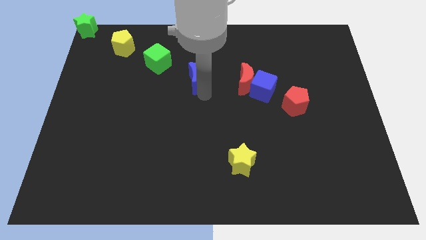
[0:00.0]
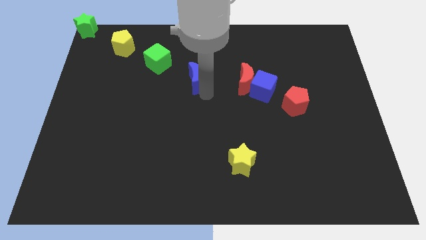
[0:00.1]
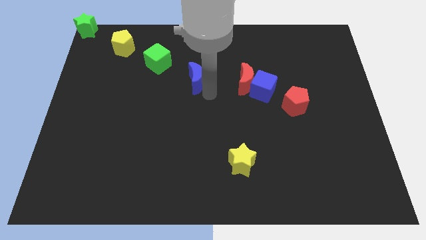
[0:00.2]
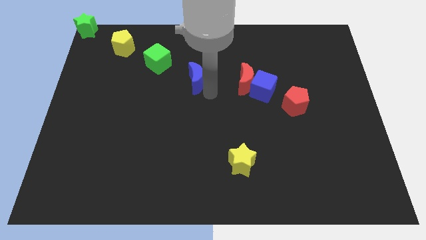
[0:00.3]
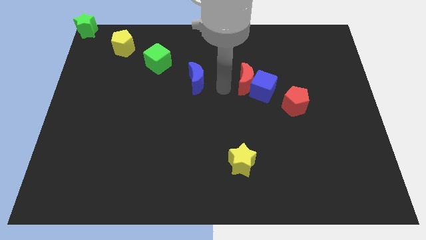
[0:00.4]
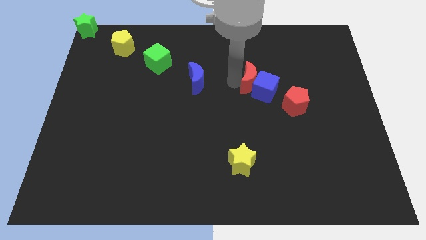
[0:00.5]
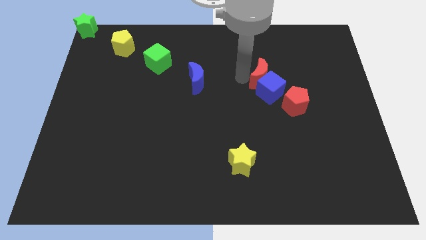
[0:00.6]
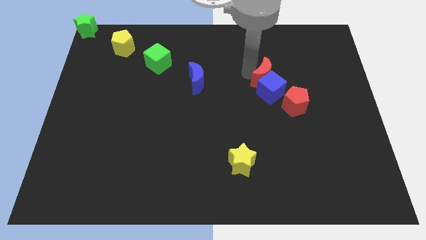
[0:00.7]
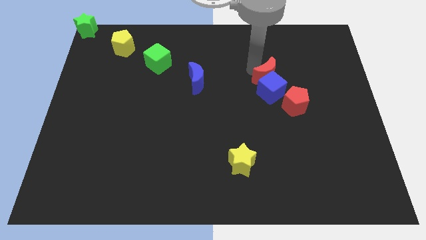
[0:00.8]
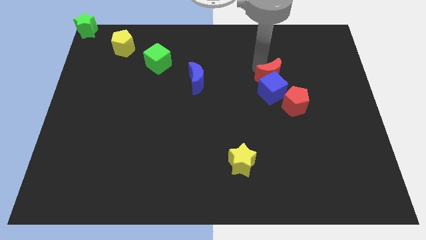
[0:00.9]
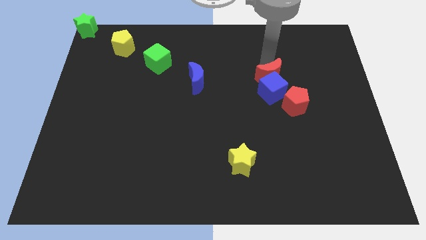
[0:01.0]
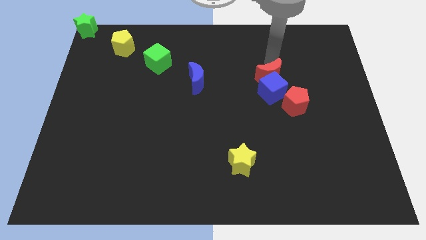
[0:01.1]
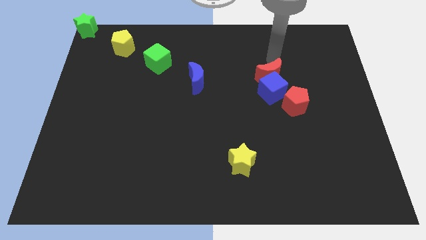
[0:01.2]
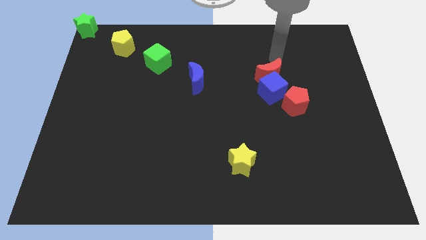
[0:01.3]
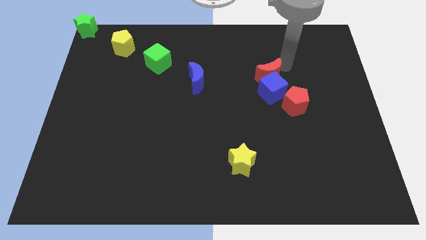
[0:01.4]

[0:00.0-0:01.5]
place the red moon at the top side of the blue cube

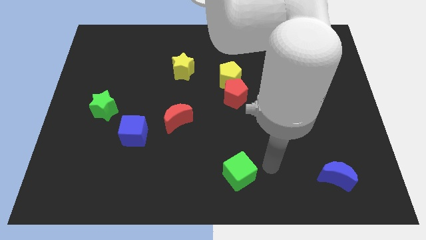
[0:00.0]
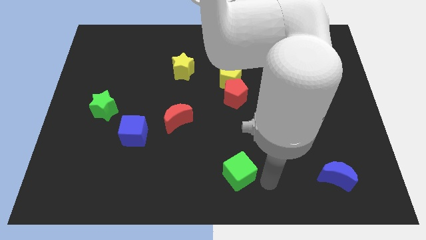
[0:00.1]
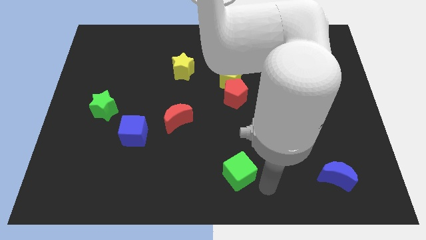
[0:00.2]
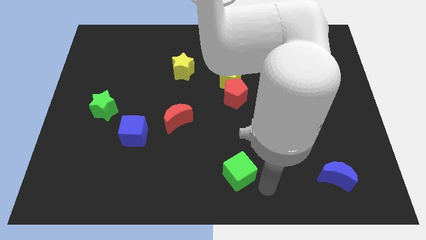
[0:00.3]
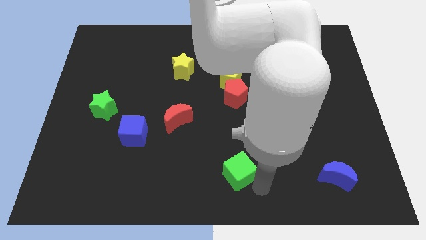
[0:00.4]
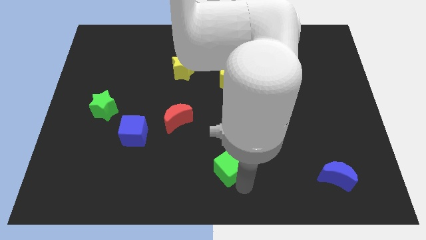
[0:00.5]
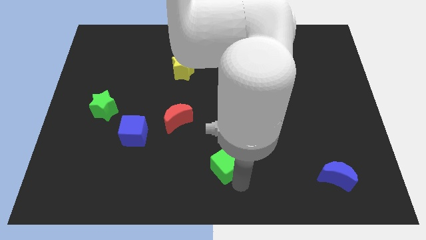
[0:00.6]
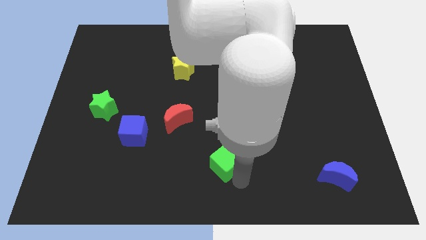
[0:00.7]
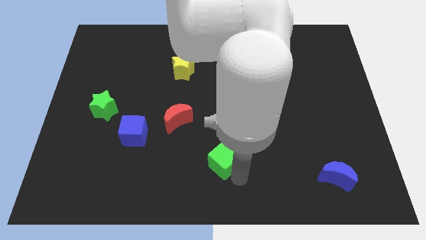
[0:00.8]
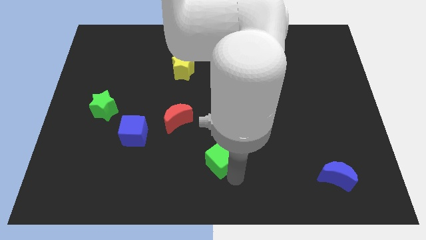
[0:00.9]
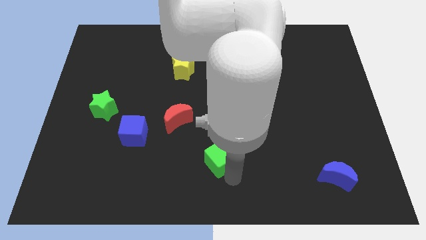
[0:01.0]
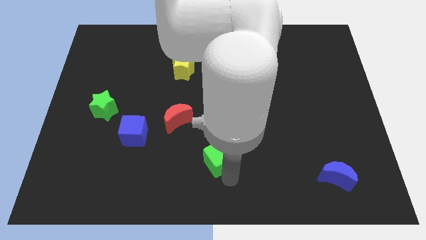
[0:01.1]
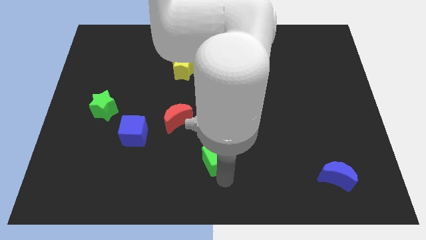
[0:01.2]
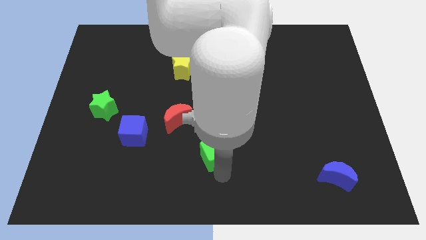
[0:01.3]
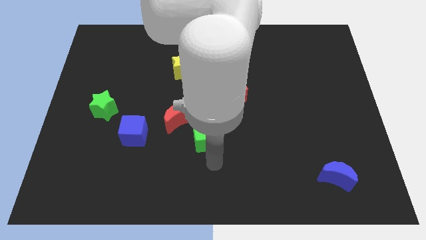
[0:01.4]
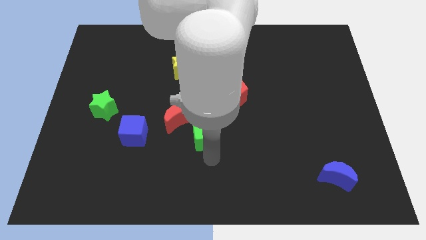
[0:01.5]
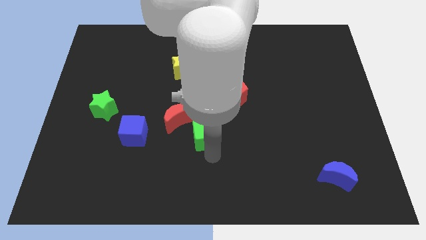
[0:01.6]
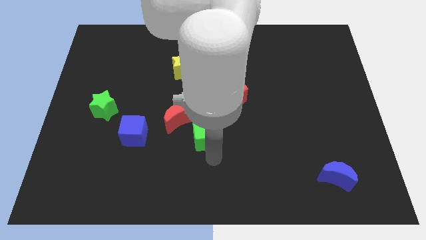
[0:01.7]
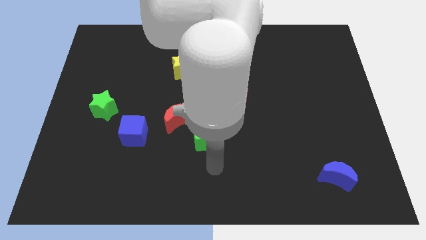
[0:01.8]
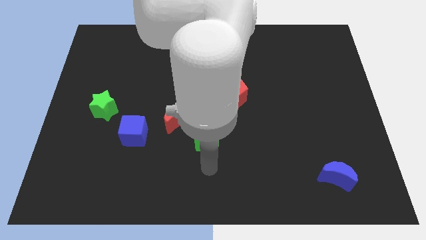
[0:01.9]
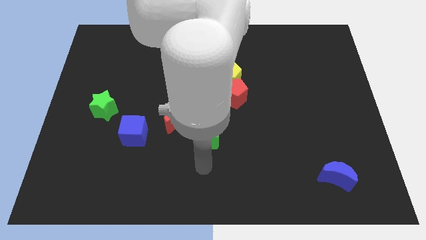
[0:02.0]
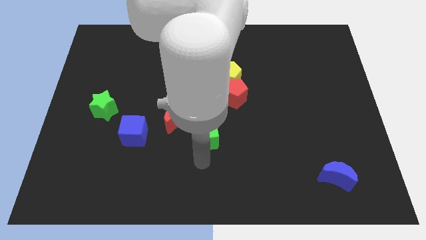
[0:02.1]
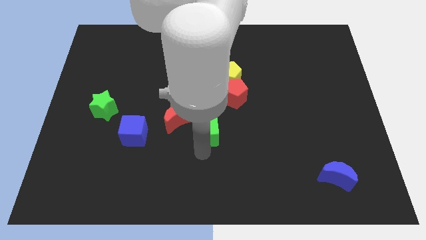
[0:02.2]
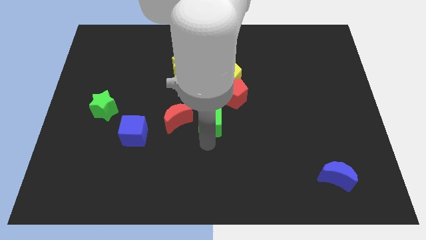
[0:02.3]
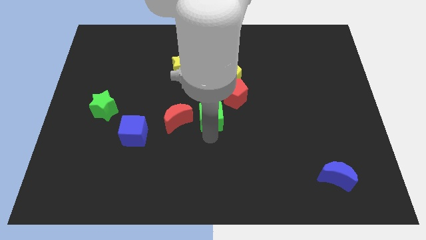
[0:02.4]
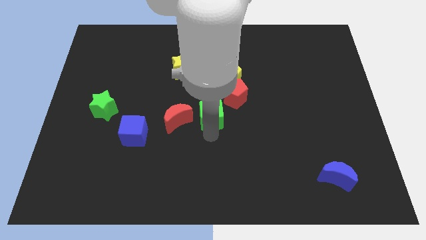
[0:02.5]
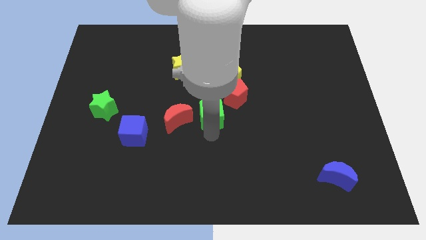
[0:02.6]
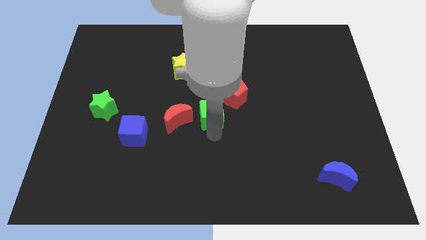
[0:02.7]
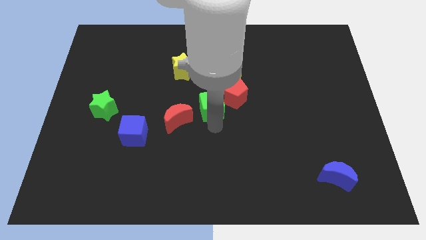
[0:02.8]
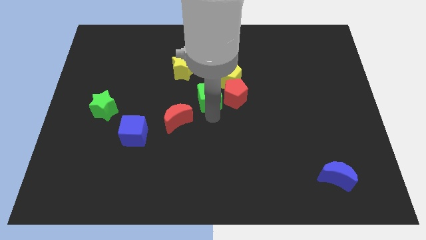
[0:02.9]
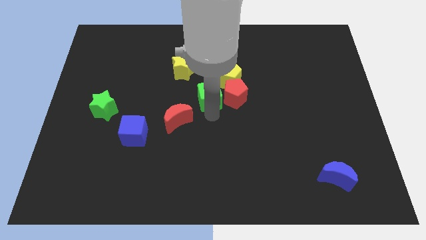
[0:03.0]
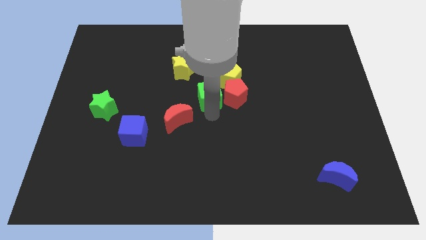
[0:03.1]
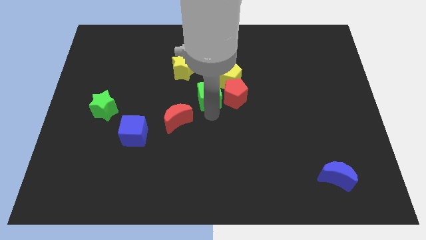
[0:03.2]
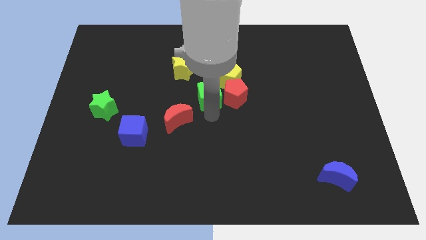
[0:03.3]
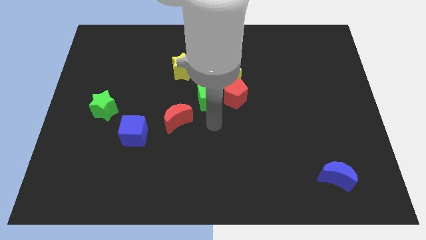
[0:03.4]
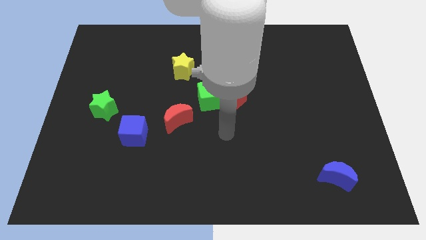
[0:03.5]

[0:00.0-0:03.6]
push green cube to center of the board

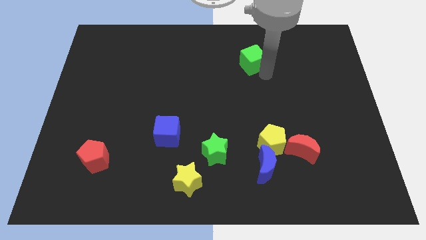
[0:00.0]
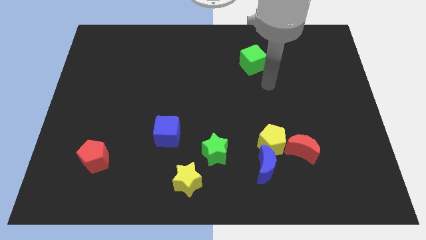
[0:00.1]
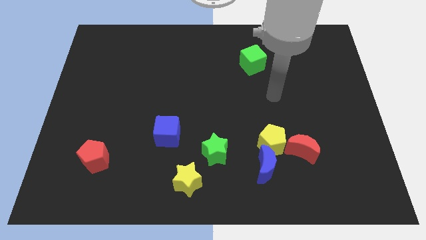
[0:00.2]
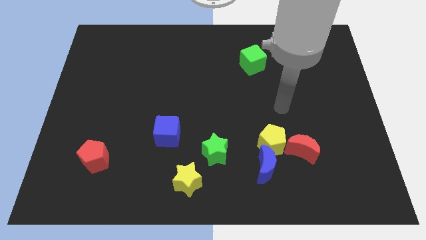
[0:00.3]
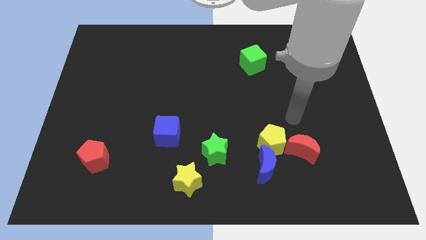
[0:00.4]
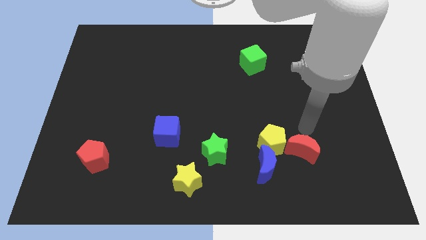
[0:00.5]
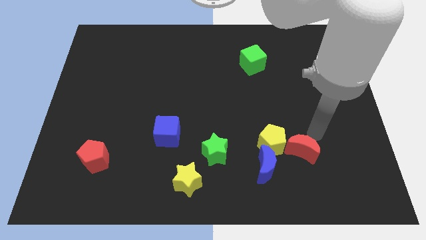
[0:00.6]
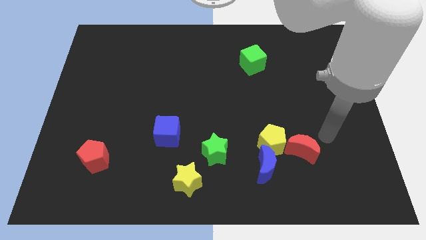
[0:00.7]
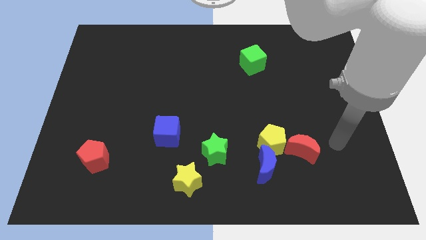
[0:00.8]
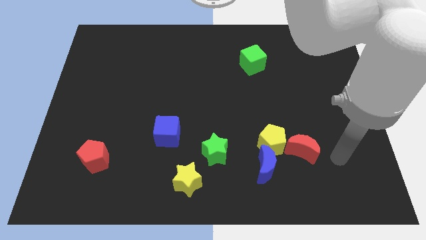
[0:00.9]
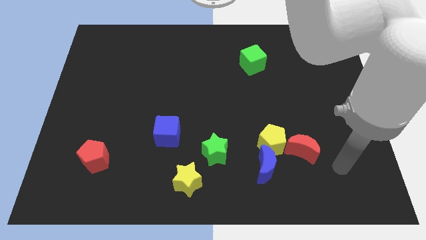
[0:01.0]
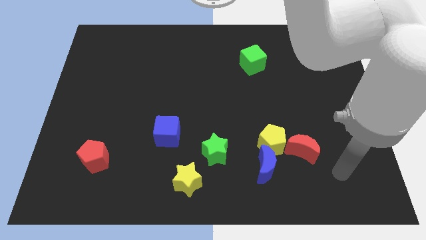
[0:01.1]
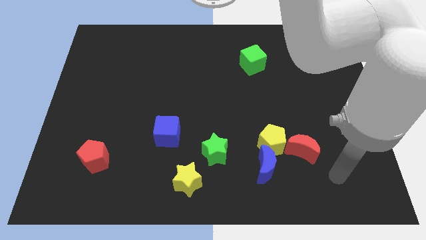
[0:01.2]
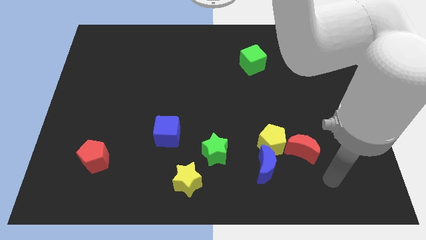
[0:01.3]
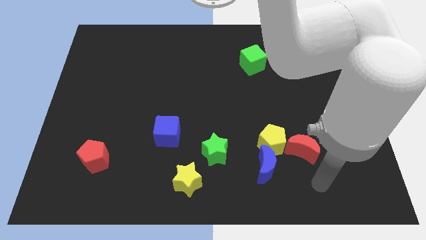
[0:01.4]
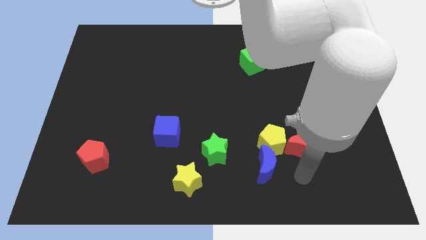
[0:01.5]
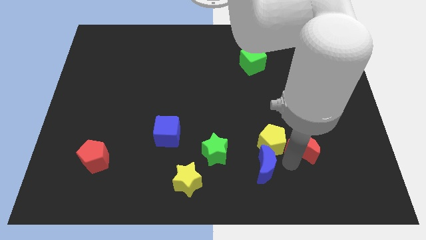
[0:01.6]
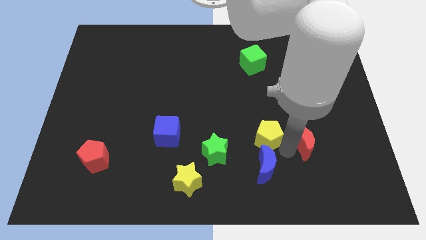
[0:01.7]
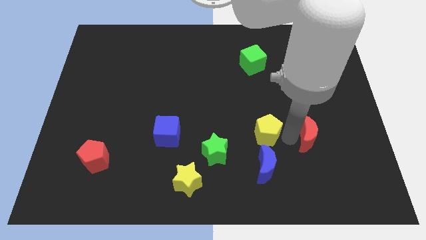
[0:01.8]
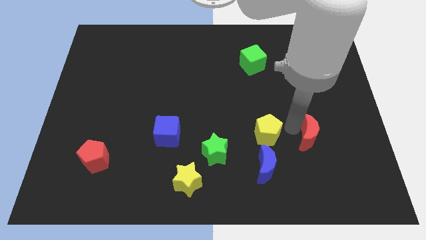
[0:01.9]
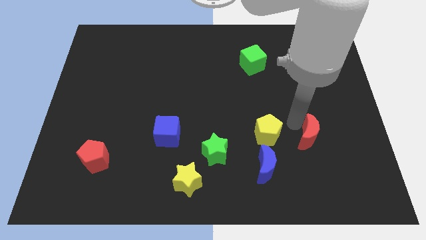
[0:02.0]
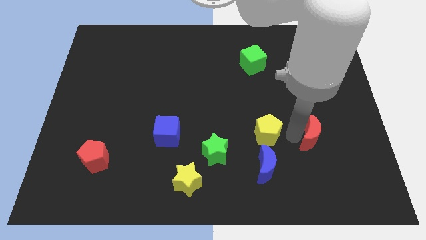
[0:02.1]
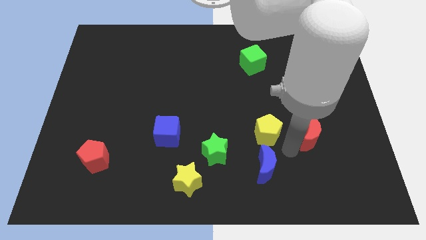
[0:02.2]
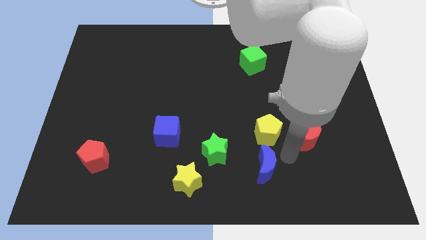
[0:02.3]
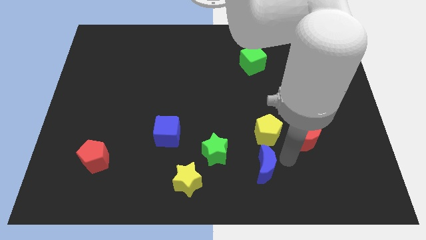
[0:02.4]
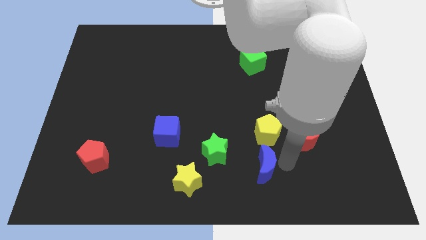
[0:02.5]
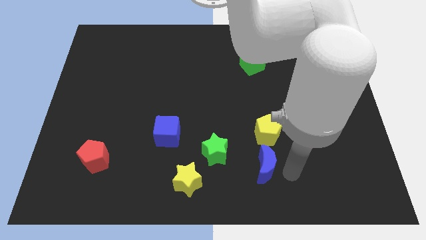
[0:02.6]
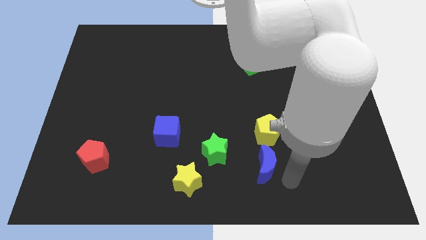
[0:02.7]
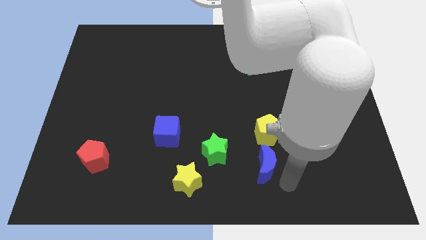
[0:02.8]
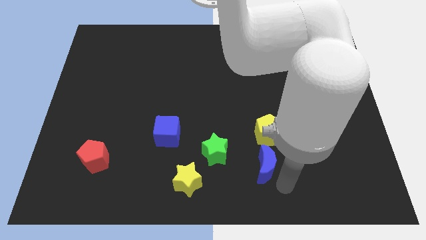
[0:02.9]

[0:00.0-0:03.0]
place the red moon diagonally top right to the blue moon

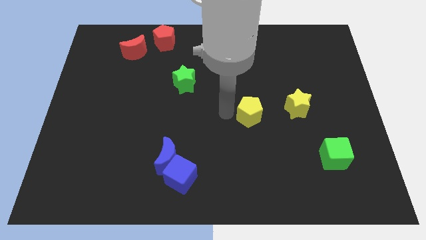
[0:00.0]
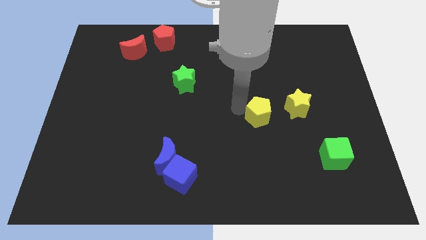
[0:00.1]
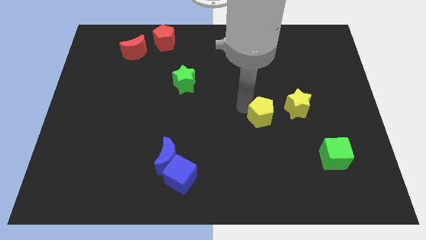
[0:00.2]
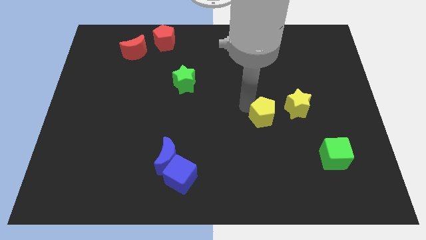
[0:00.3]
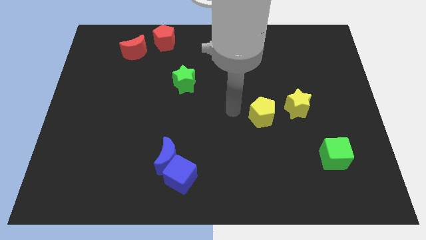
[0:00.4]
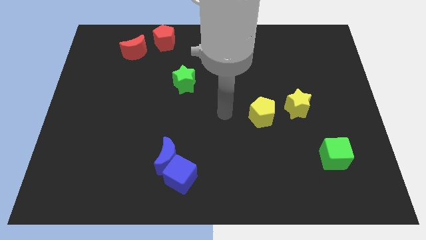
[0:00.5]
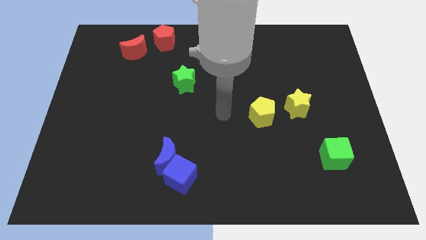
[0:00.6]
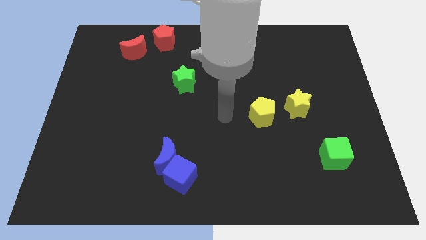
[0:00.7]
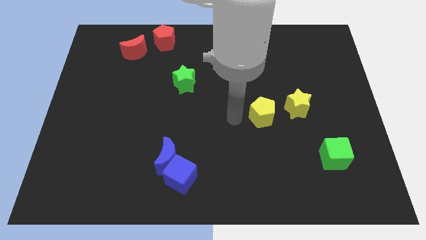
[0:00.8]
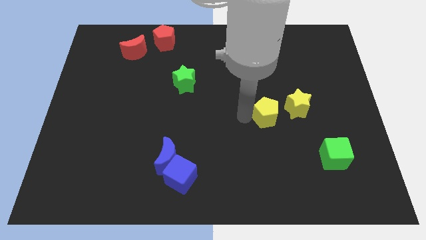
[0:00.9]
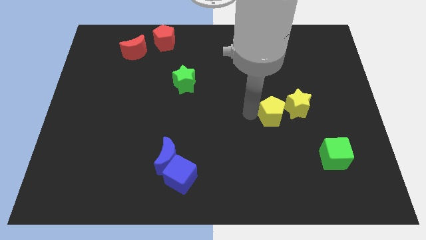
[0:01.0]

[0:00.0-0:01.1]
push yellow pentagon into yellow star
